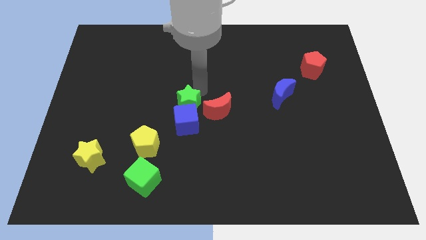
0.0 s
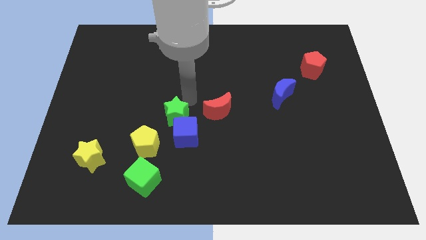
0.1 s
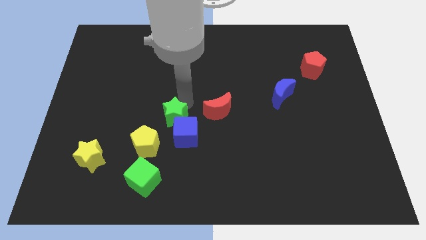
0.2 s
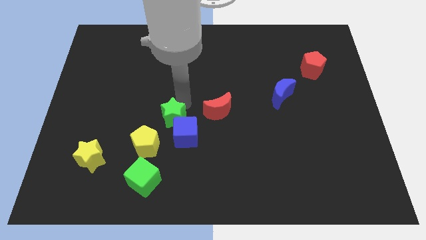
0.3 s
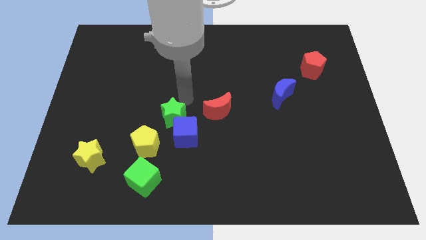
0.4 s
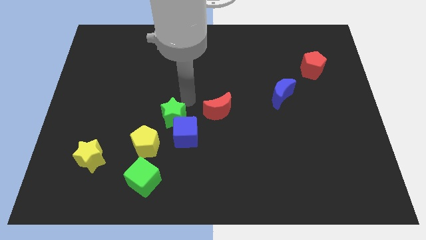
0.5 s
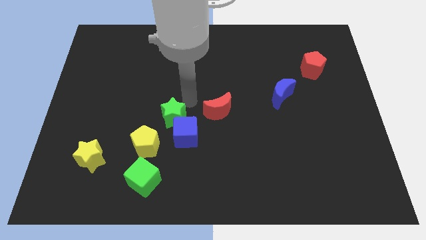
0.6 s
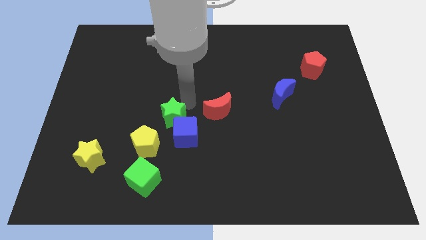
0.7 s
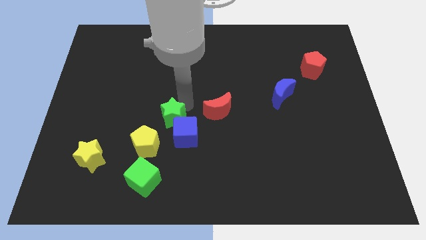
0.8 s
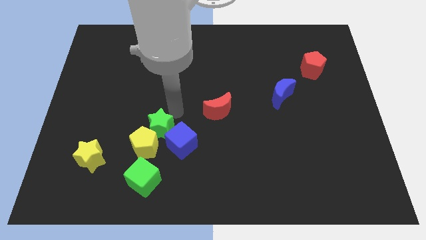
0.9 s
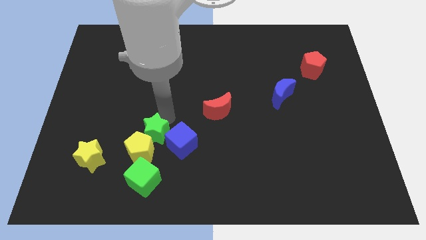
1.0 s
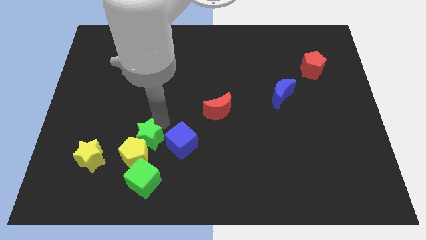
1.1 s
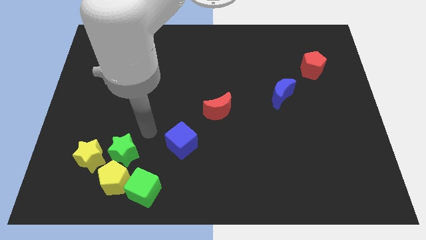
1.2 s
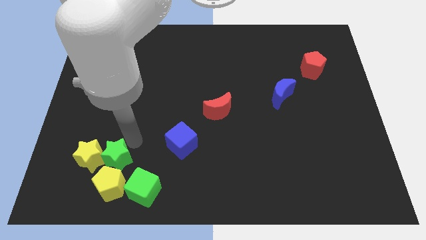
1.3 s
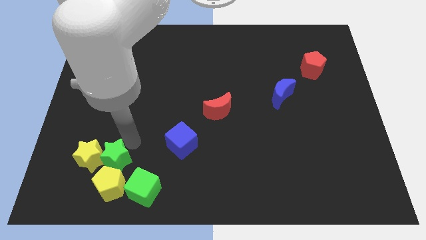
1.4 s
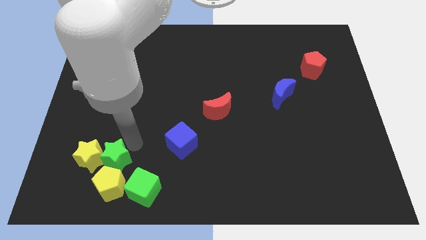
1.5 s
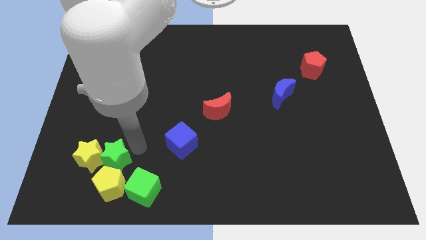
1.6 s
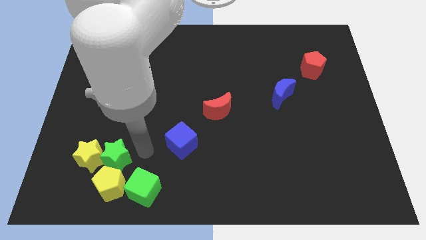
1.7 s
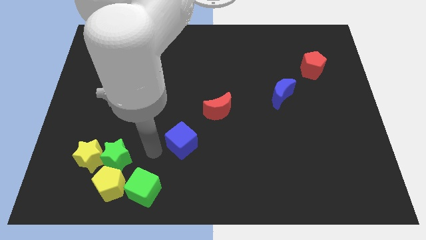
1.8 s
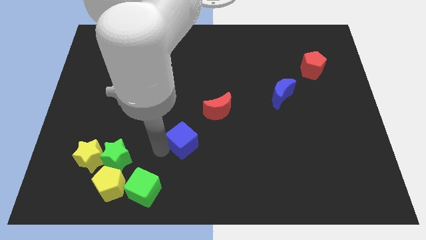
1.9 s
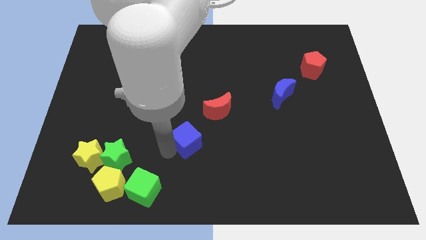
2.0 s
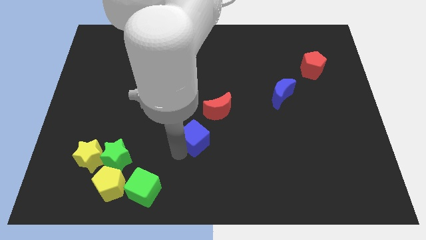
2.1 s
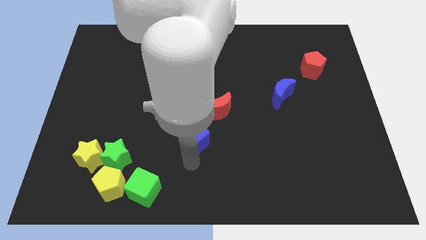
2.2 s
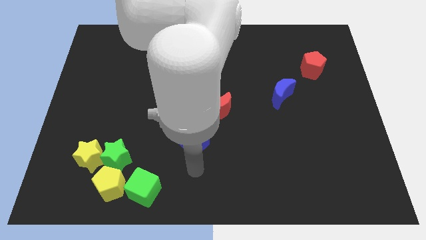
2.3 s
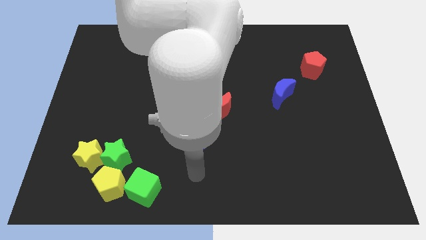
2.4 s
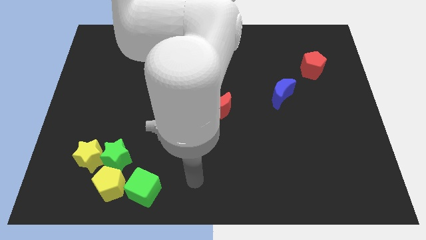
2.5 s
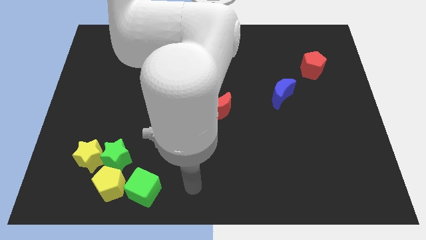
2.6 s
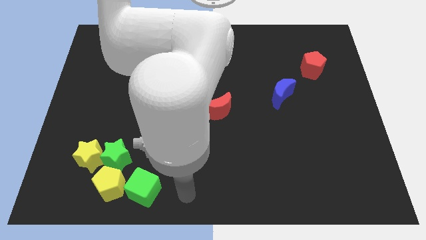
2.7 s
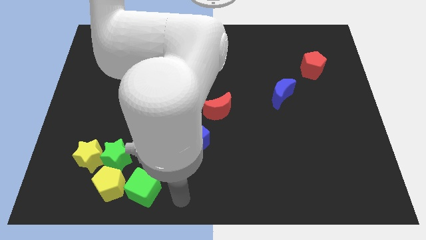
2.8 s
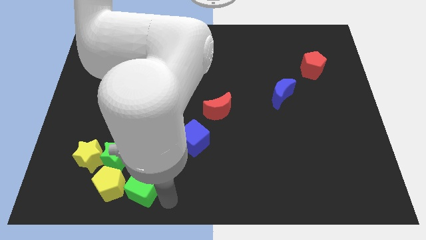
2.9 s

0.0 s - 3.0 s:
move the green star towards the group of yellow and green blocks

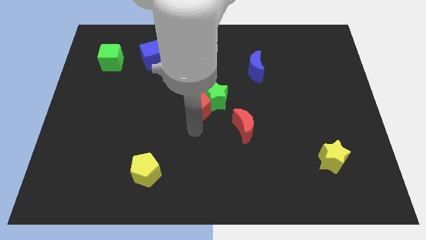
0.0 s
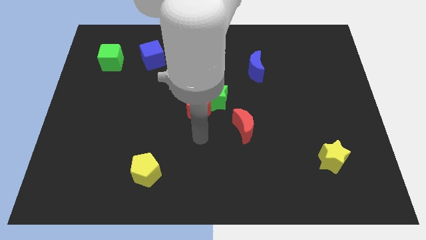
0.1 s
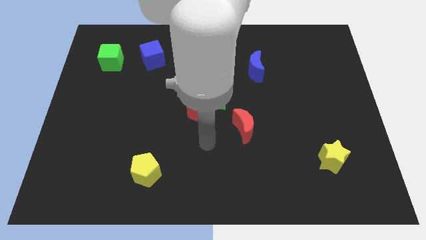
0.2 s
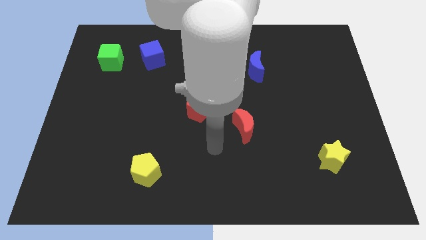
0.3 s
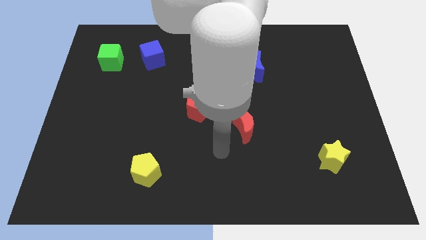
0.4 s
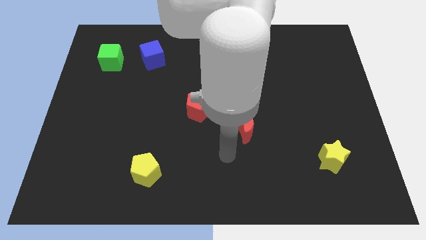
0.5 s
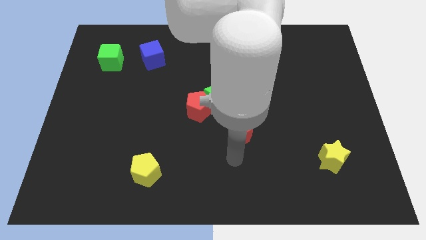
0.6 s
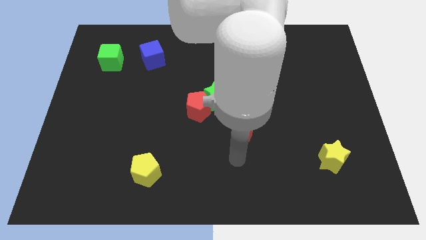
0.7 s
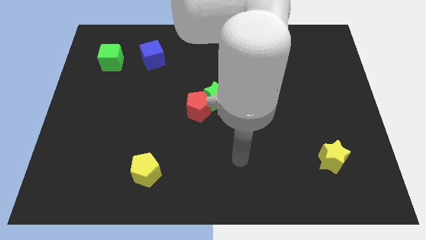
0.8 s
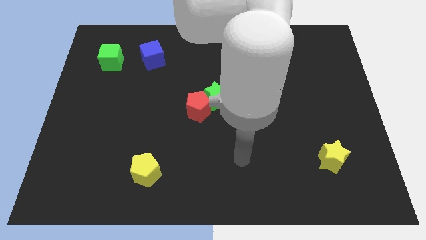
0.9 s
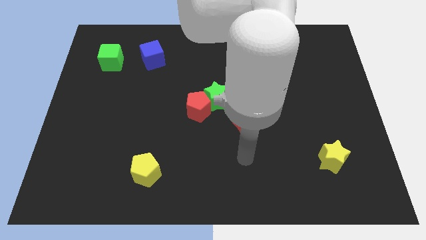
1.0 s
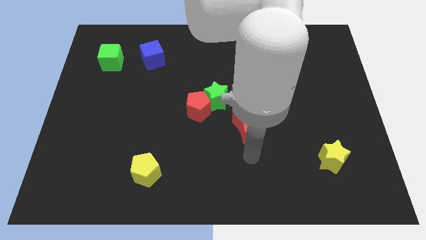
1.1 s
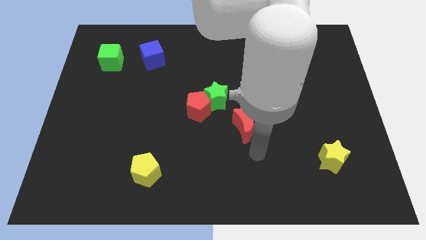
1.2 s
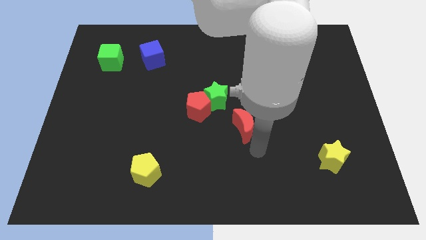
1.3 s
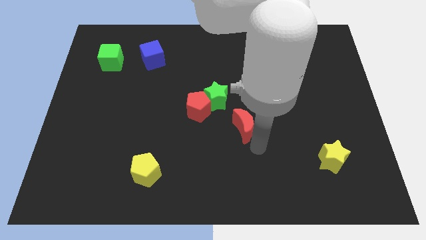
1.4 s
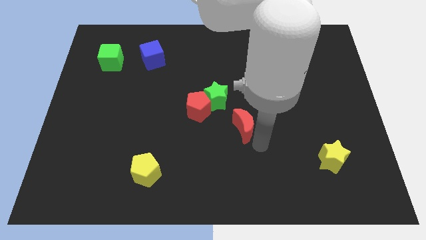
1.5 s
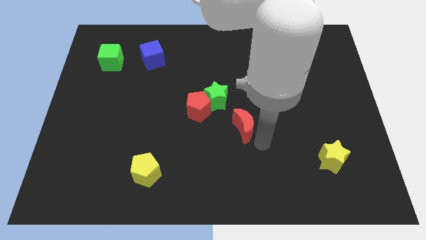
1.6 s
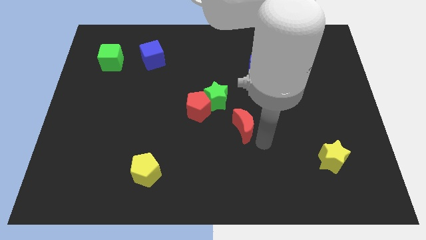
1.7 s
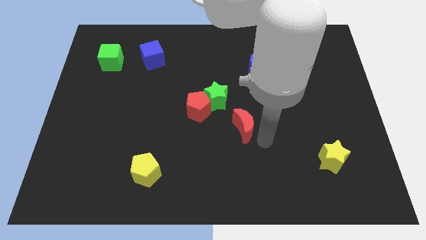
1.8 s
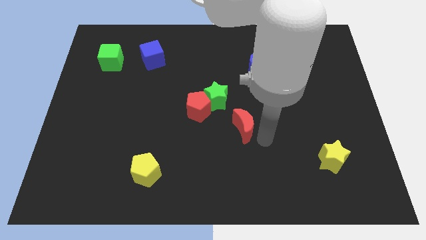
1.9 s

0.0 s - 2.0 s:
move the arm towards right to the red crescent

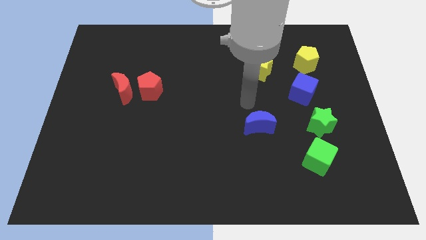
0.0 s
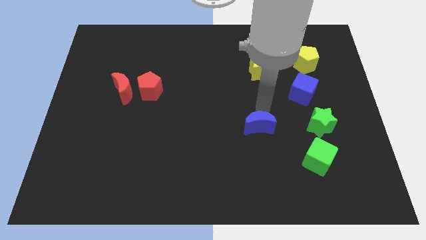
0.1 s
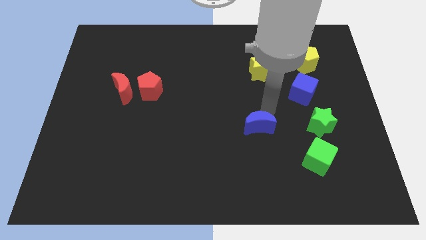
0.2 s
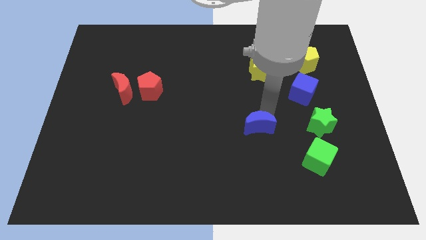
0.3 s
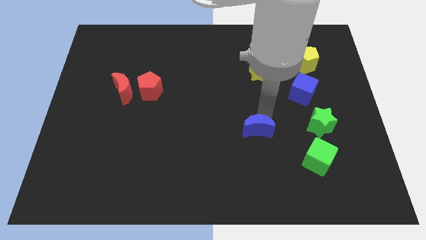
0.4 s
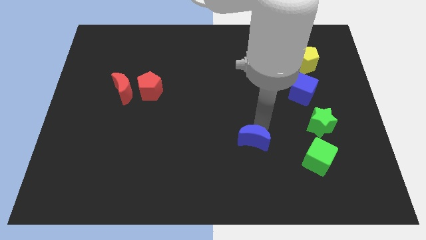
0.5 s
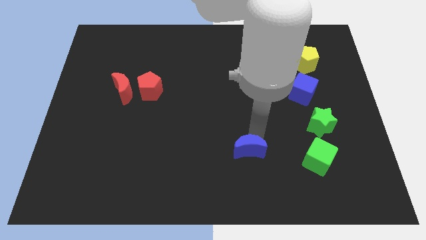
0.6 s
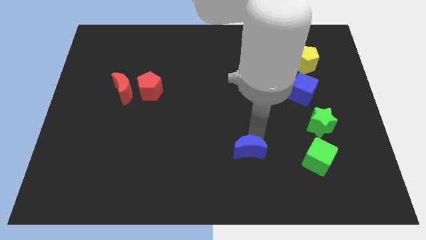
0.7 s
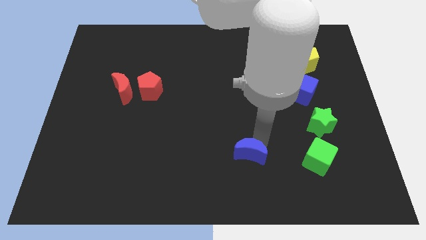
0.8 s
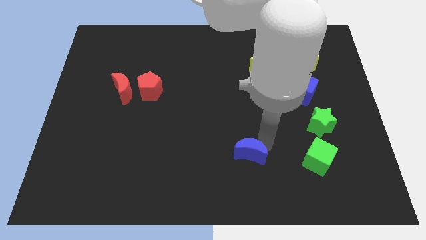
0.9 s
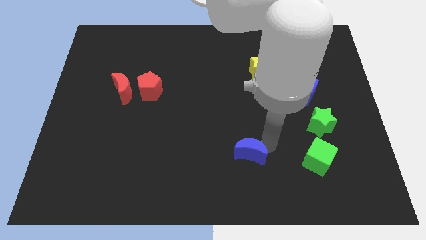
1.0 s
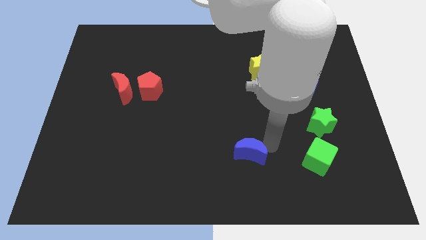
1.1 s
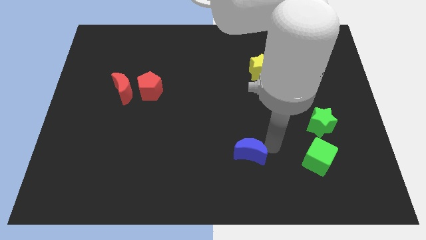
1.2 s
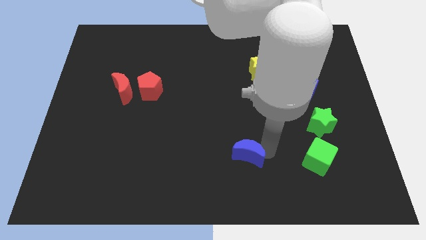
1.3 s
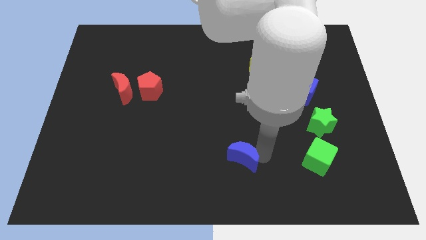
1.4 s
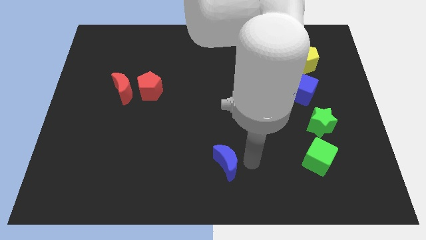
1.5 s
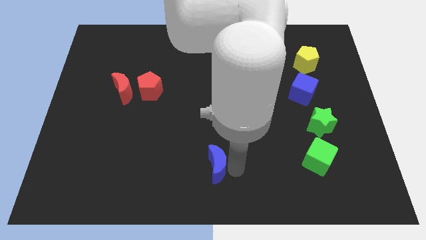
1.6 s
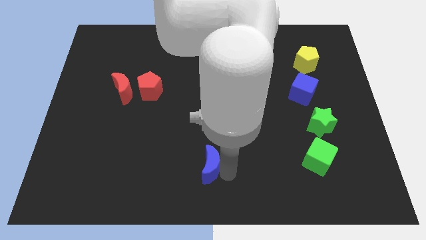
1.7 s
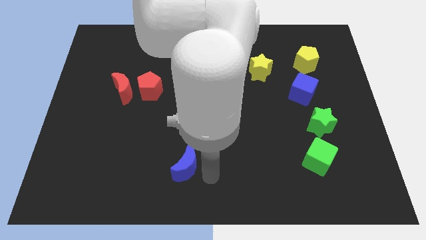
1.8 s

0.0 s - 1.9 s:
push the blue moon diagonally bottom left to the yellow star

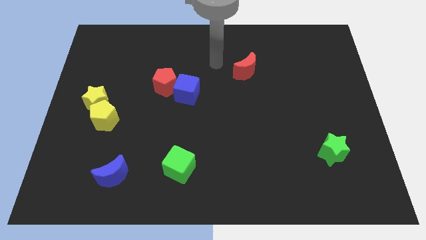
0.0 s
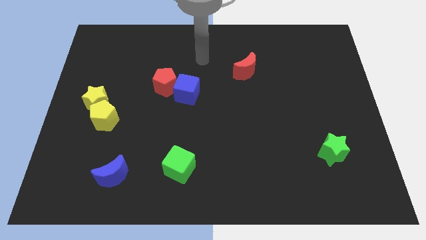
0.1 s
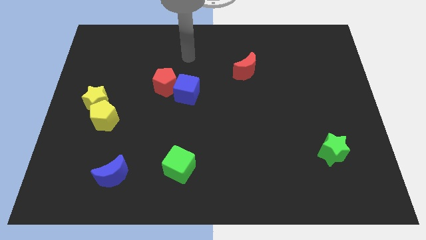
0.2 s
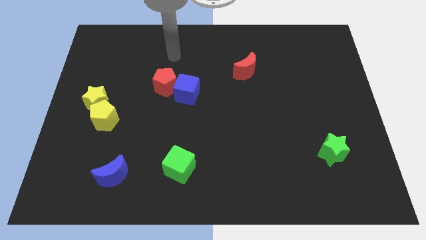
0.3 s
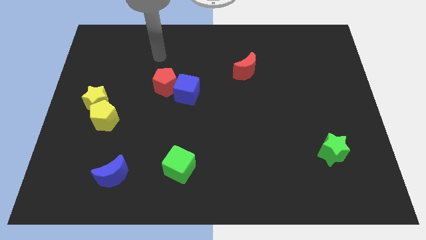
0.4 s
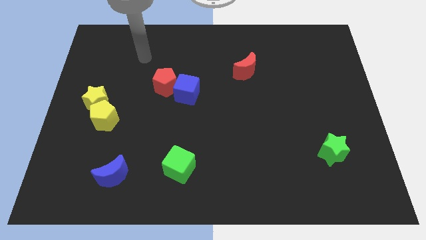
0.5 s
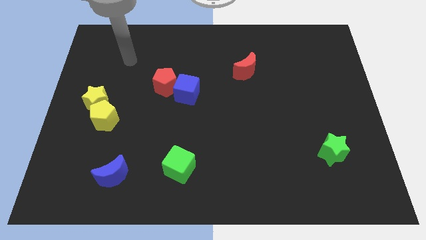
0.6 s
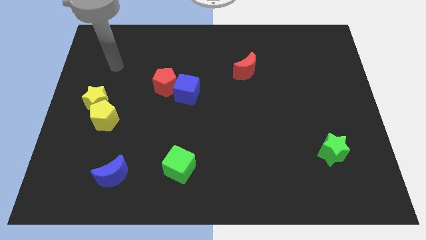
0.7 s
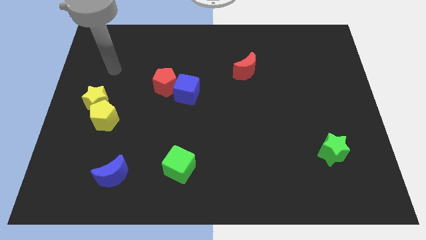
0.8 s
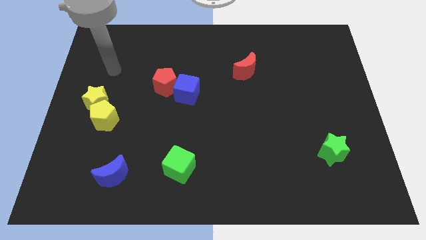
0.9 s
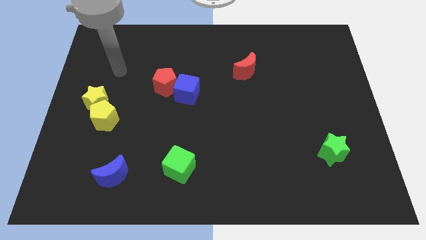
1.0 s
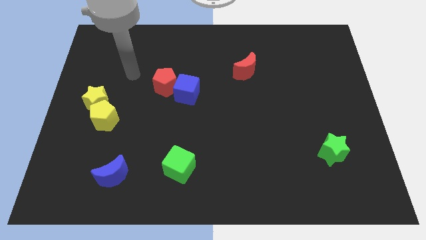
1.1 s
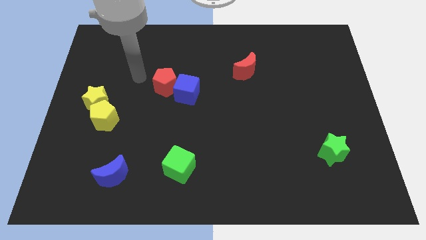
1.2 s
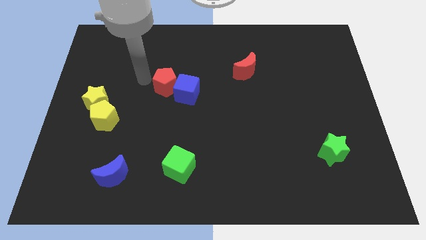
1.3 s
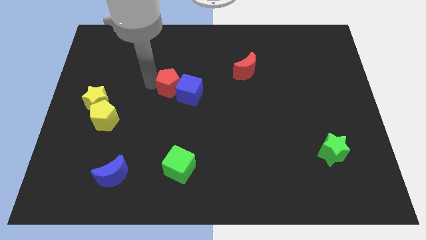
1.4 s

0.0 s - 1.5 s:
place your arm to the left of the red pentagon

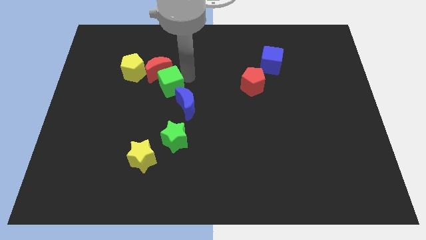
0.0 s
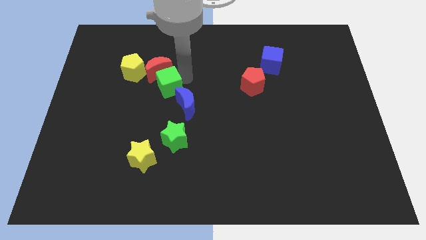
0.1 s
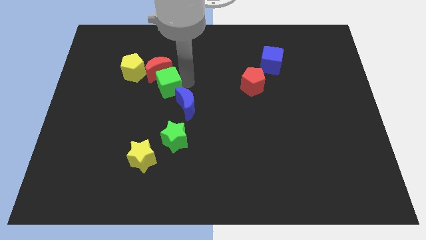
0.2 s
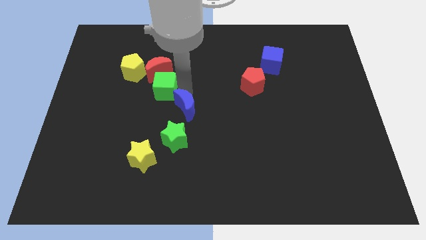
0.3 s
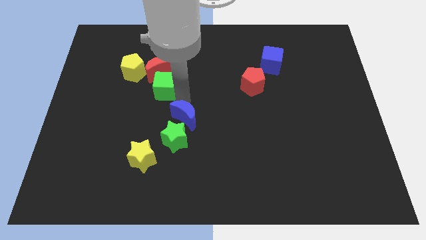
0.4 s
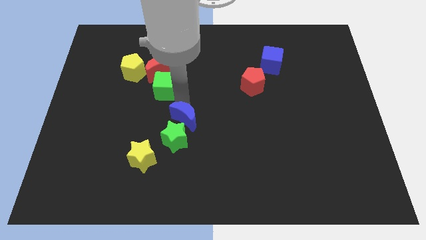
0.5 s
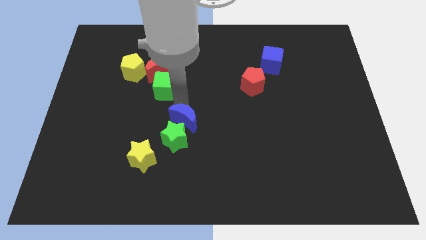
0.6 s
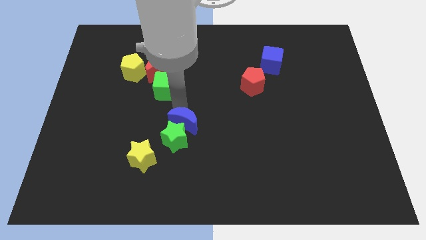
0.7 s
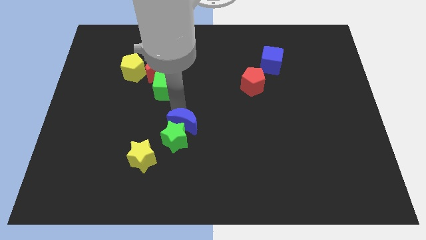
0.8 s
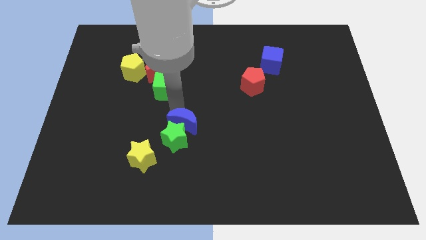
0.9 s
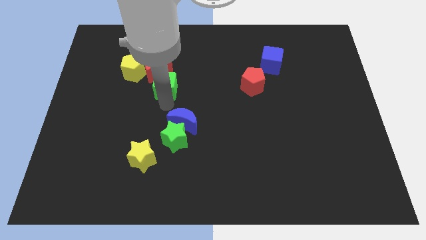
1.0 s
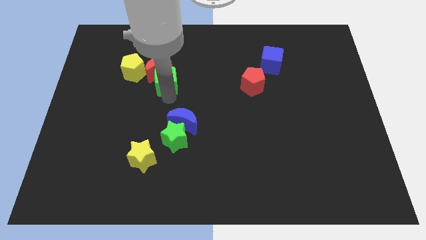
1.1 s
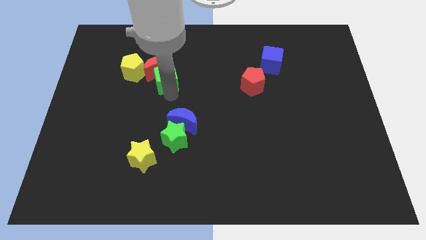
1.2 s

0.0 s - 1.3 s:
push the blue moon above the green star
